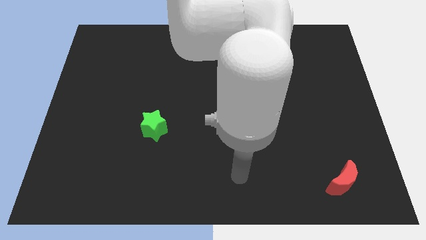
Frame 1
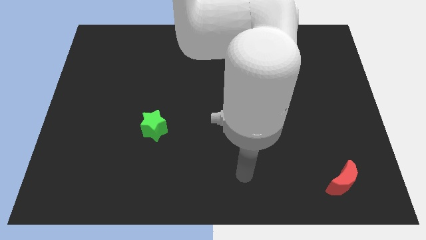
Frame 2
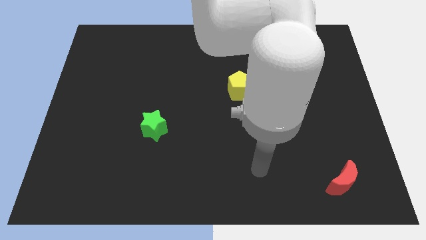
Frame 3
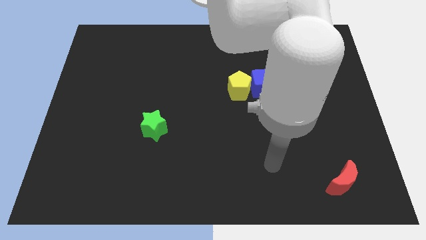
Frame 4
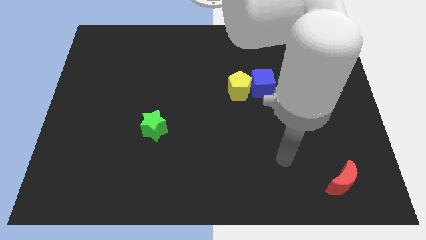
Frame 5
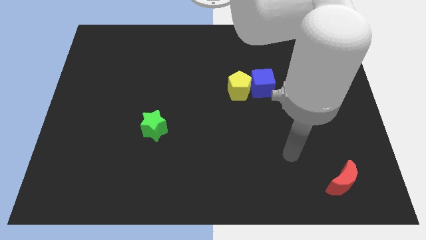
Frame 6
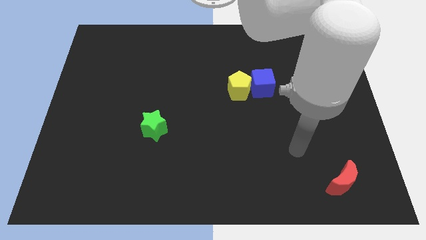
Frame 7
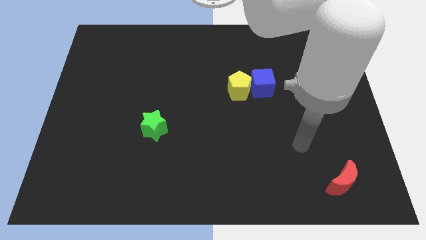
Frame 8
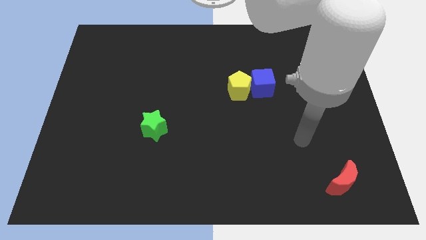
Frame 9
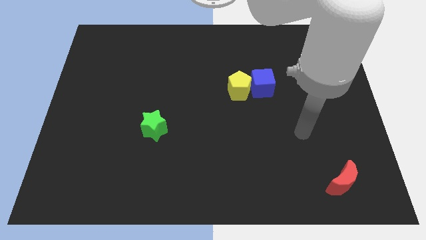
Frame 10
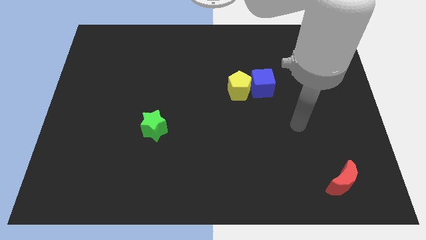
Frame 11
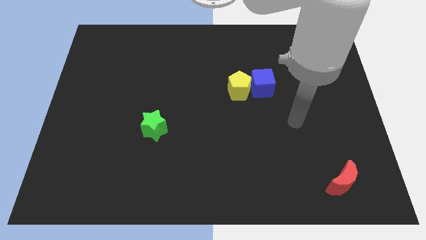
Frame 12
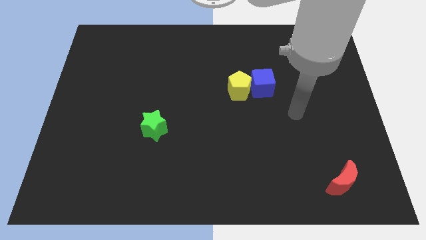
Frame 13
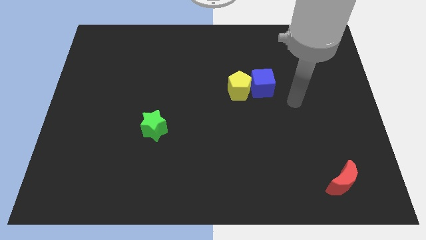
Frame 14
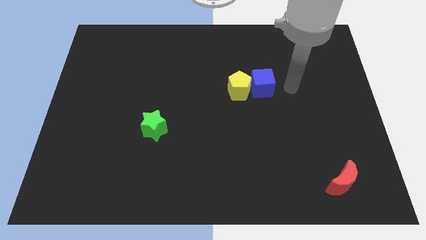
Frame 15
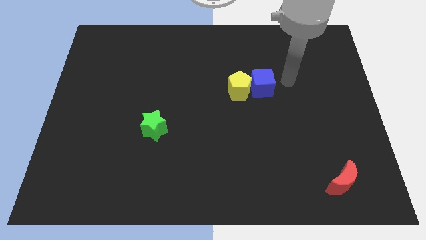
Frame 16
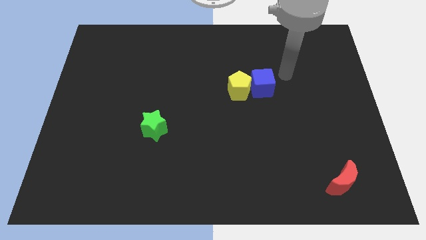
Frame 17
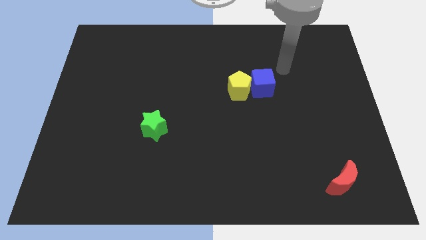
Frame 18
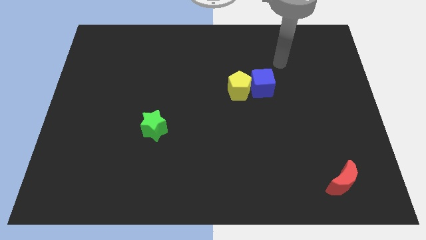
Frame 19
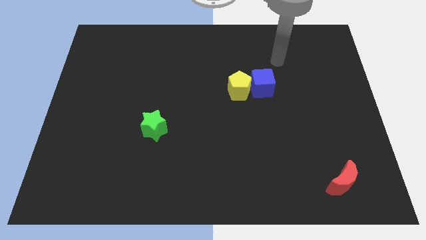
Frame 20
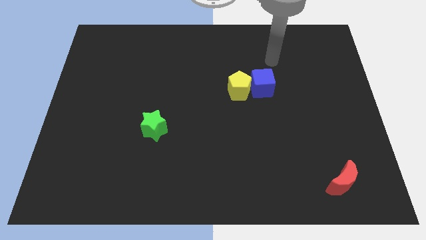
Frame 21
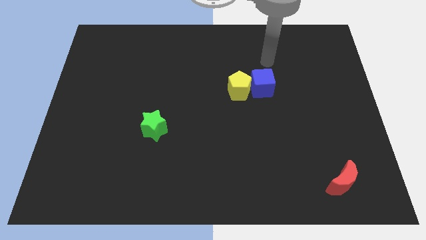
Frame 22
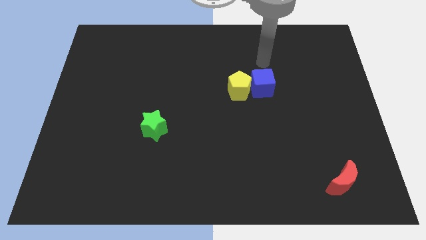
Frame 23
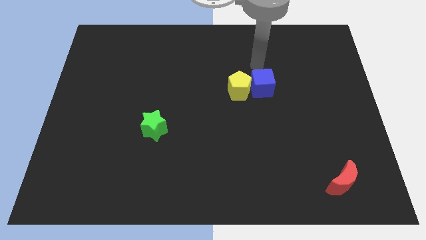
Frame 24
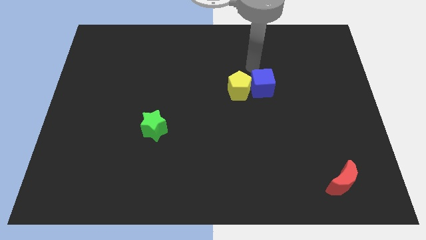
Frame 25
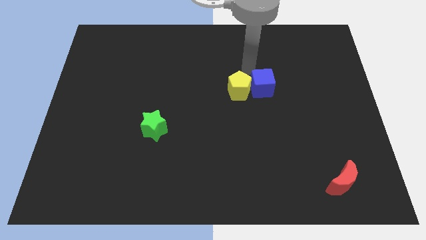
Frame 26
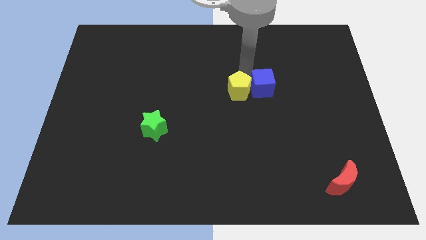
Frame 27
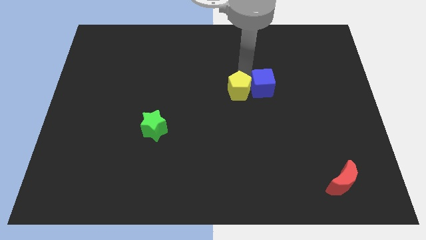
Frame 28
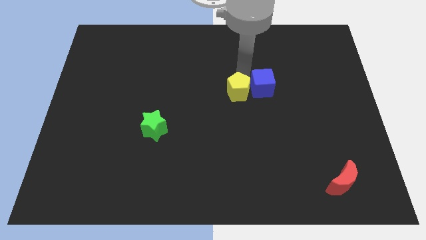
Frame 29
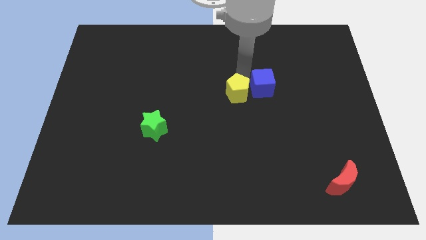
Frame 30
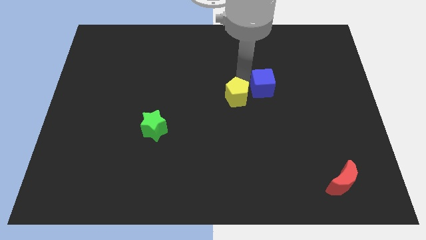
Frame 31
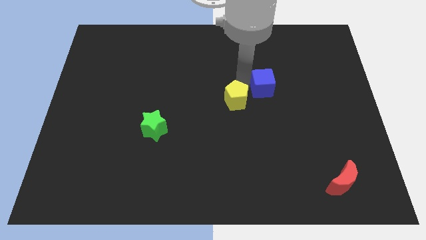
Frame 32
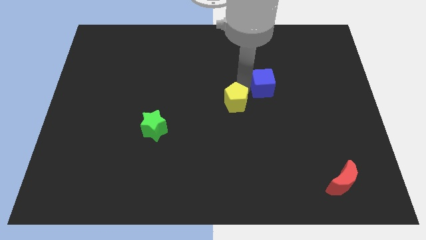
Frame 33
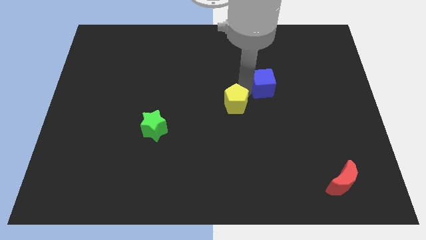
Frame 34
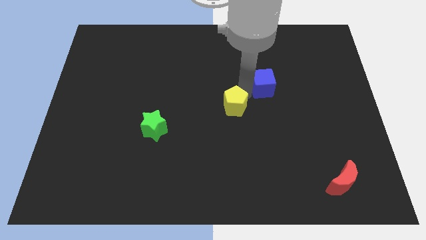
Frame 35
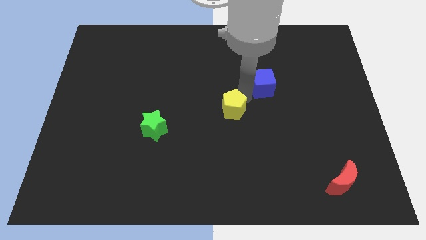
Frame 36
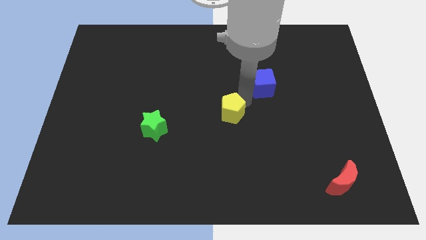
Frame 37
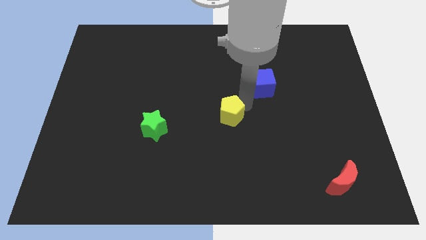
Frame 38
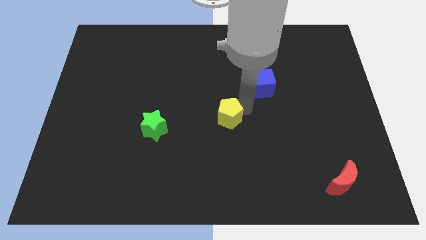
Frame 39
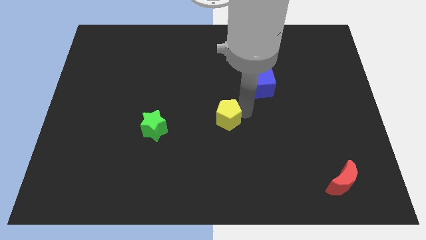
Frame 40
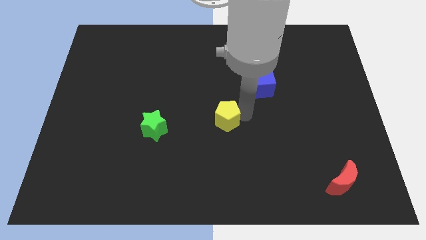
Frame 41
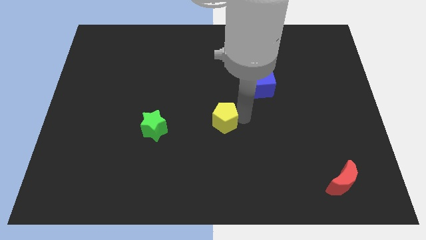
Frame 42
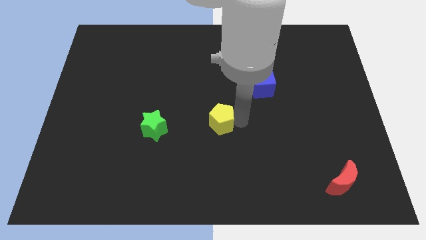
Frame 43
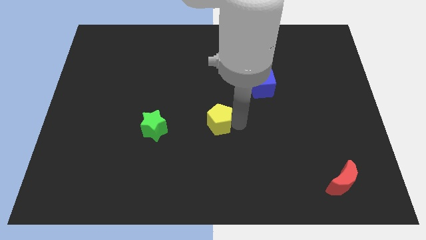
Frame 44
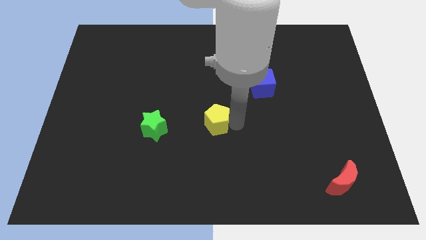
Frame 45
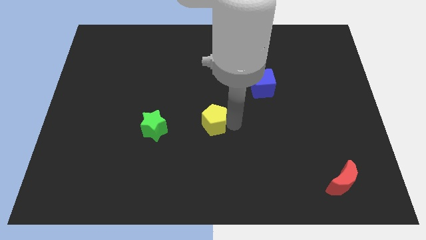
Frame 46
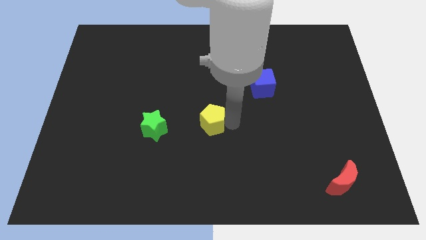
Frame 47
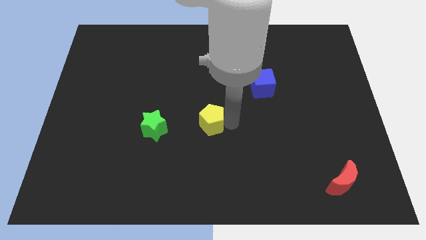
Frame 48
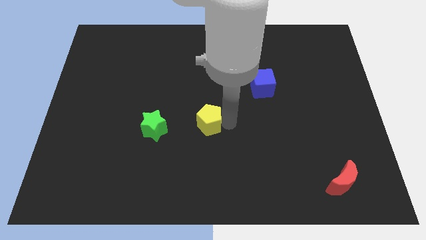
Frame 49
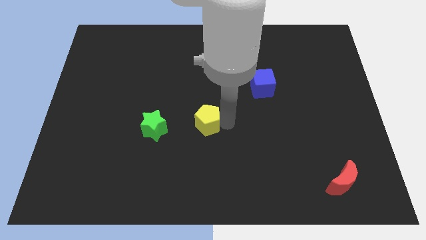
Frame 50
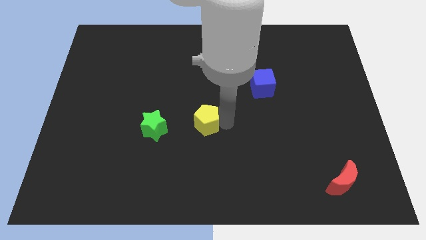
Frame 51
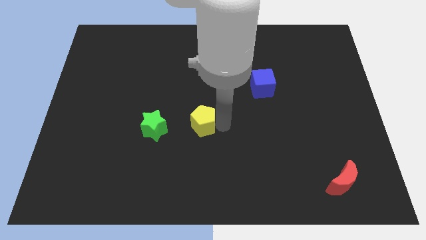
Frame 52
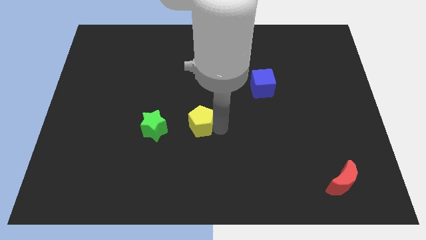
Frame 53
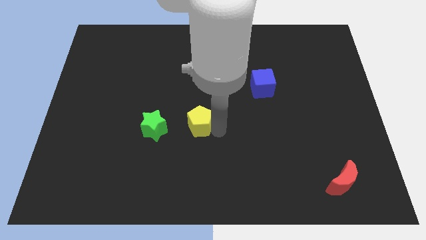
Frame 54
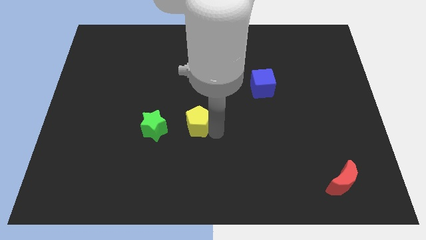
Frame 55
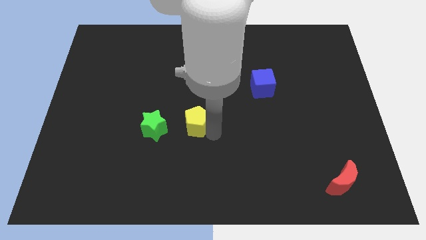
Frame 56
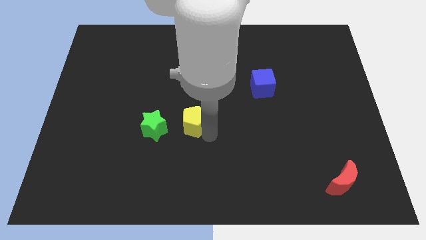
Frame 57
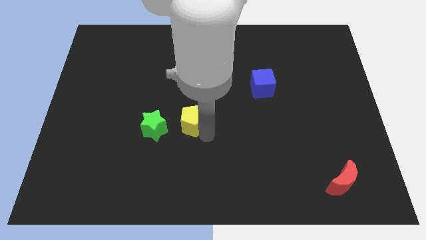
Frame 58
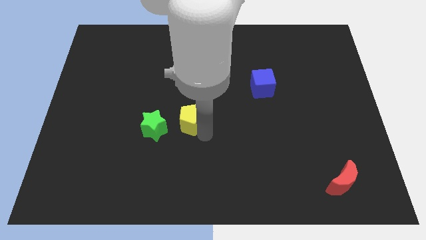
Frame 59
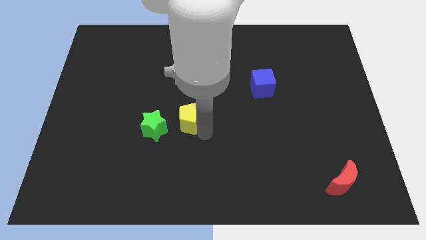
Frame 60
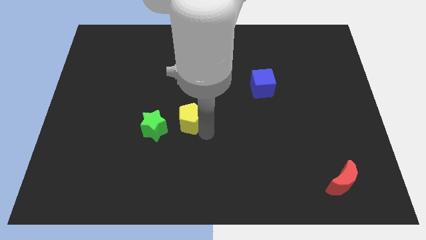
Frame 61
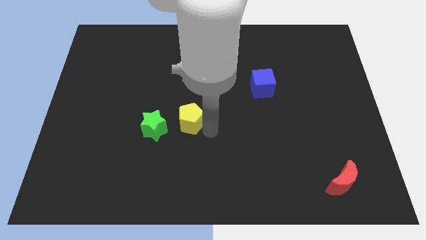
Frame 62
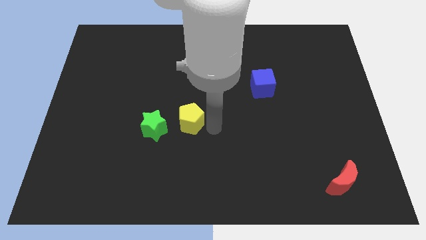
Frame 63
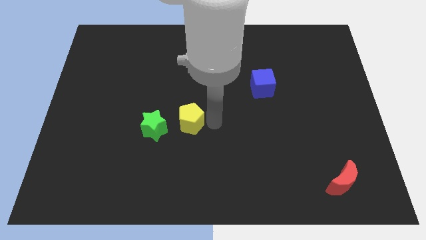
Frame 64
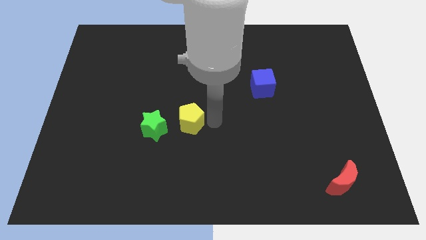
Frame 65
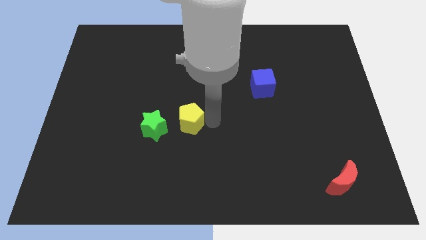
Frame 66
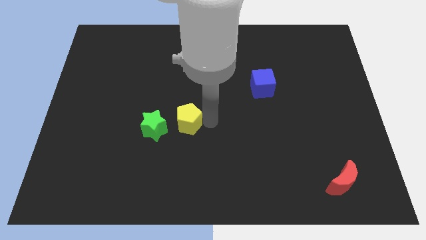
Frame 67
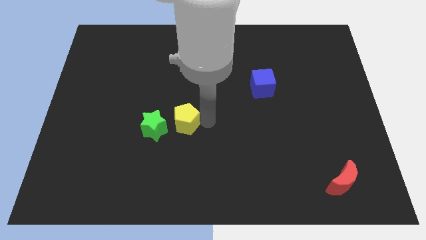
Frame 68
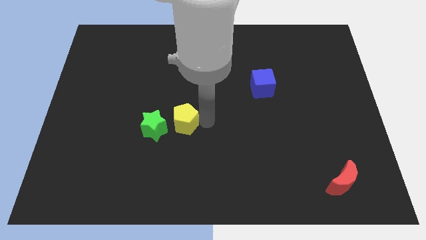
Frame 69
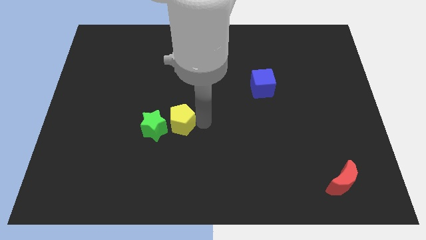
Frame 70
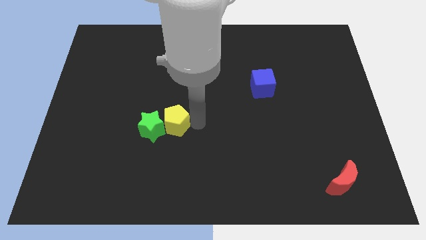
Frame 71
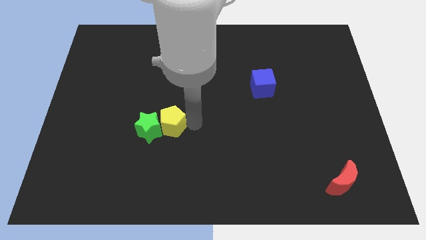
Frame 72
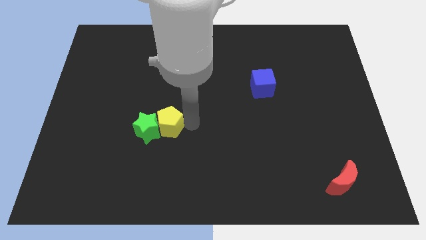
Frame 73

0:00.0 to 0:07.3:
push the yellow block next to the green block

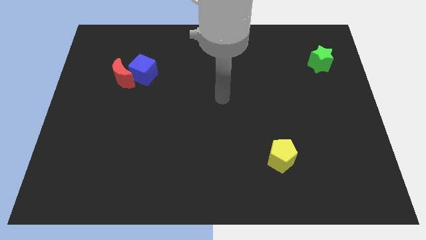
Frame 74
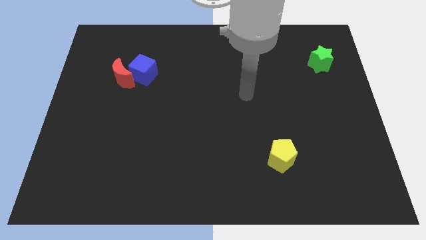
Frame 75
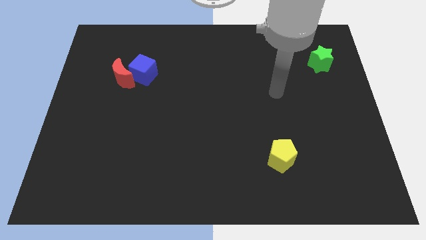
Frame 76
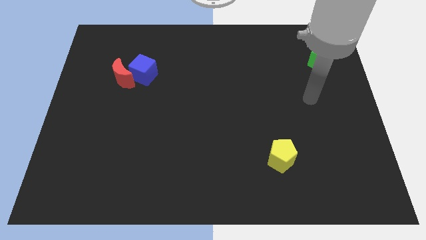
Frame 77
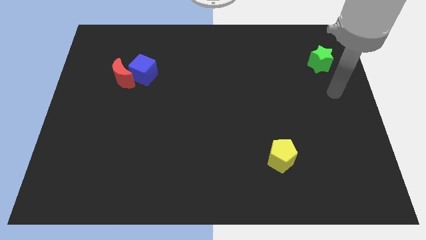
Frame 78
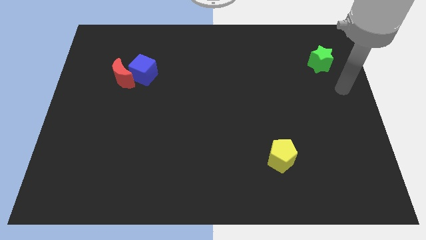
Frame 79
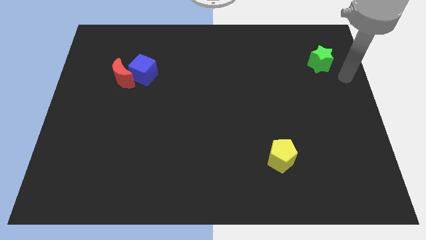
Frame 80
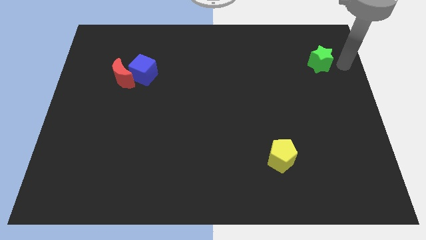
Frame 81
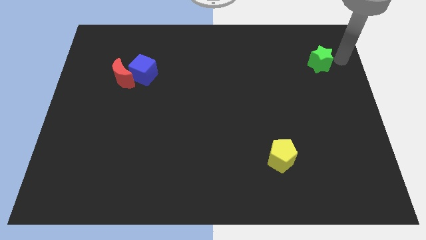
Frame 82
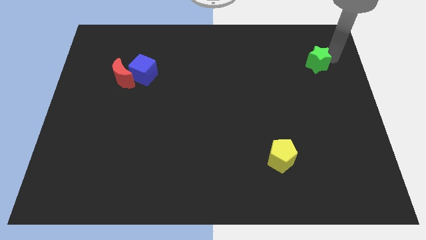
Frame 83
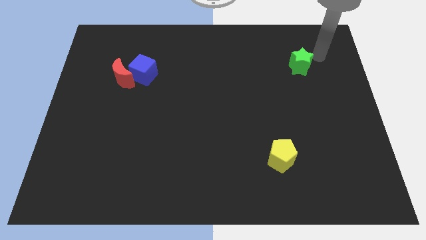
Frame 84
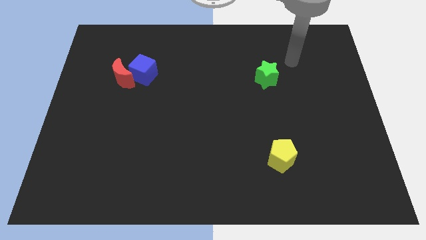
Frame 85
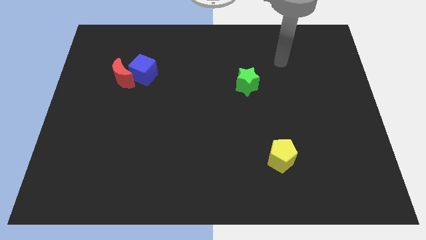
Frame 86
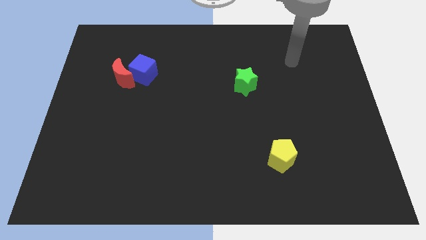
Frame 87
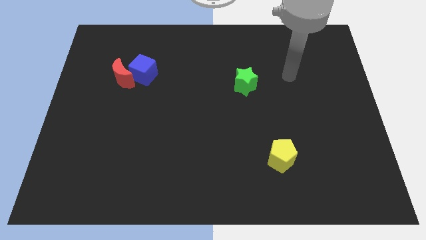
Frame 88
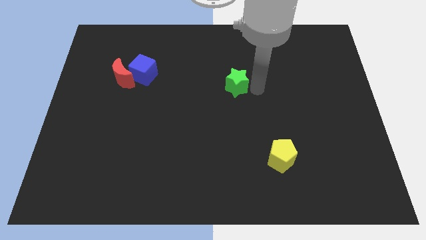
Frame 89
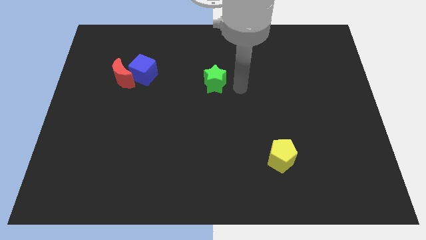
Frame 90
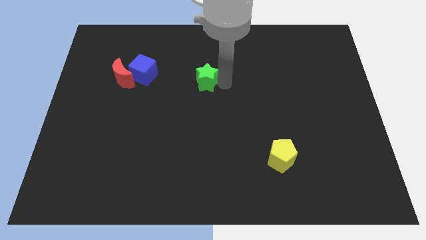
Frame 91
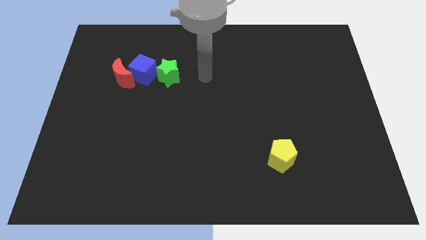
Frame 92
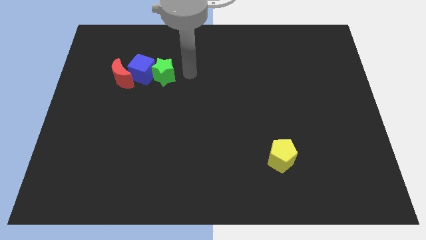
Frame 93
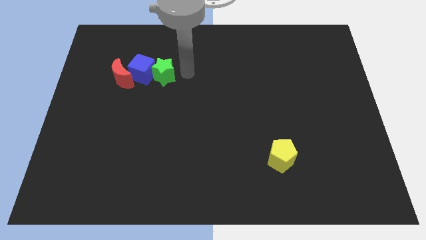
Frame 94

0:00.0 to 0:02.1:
put the green star close to the blue cube
